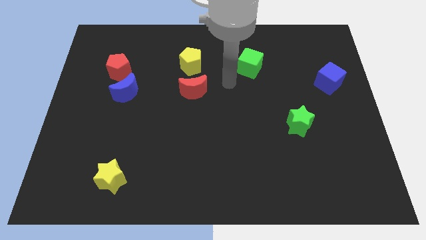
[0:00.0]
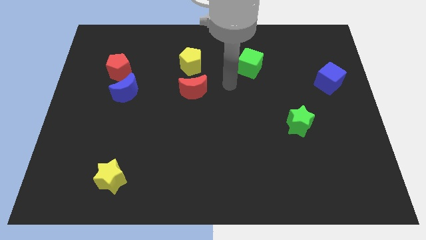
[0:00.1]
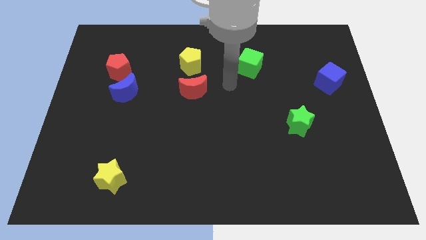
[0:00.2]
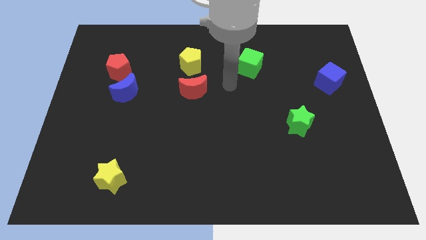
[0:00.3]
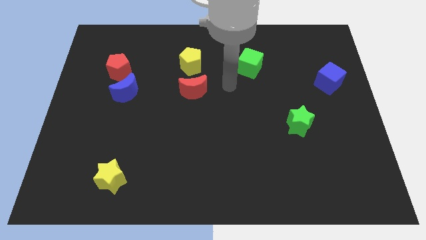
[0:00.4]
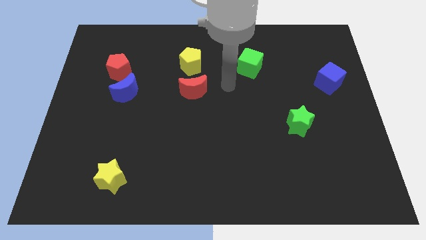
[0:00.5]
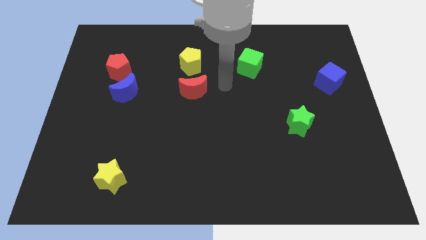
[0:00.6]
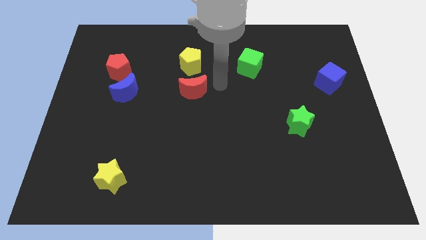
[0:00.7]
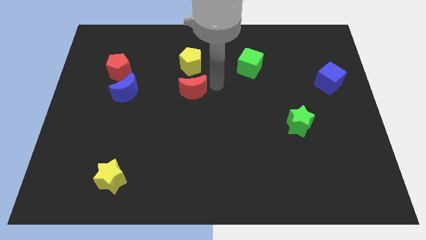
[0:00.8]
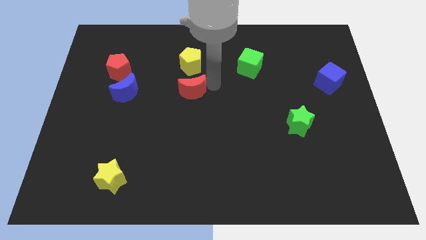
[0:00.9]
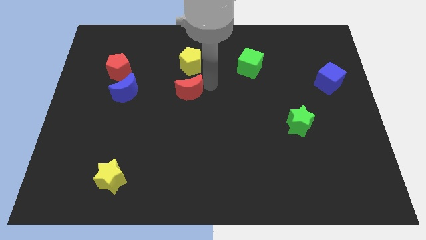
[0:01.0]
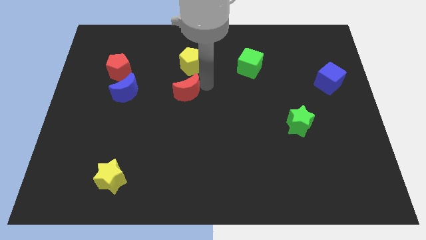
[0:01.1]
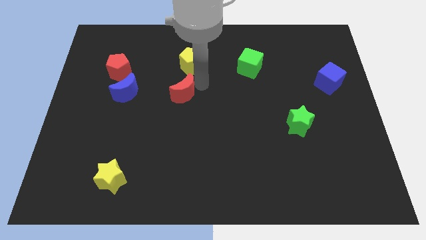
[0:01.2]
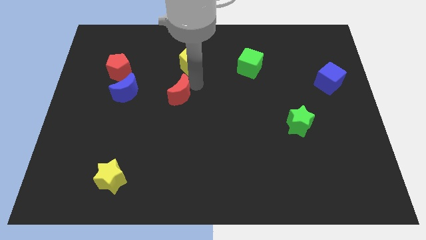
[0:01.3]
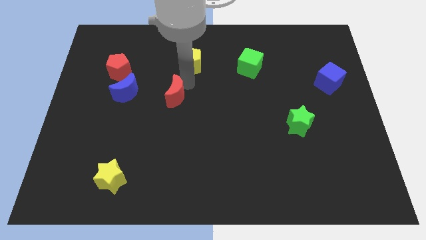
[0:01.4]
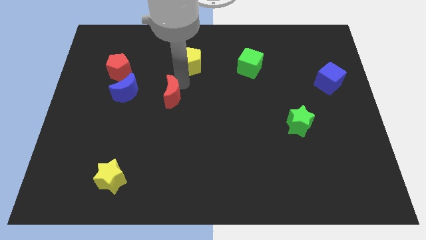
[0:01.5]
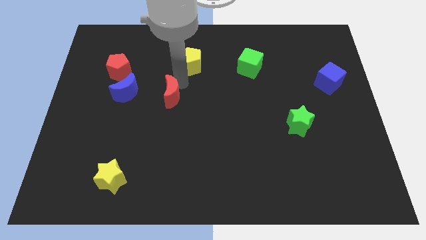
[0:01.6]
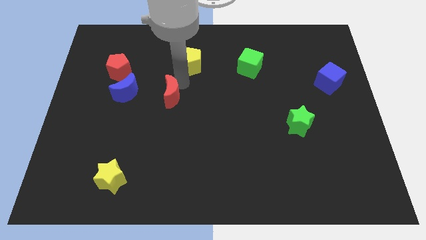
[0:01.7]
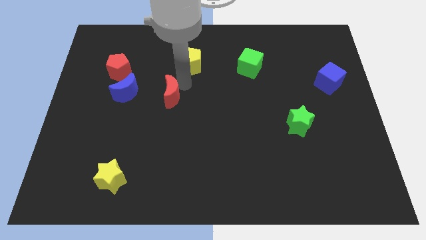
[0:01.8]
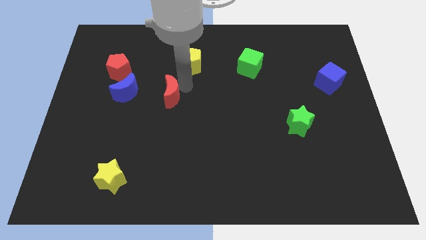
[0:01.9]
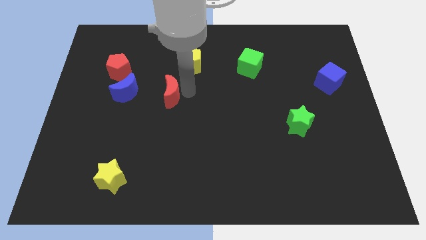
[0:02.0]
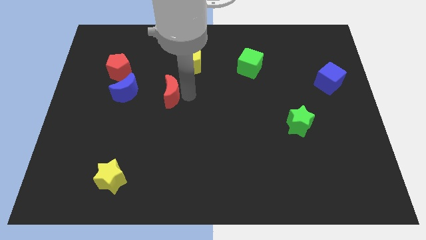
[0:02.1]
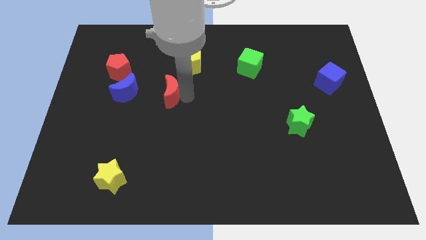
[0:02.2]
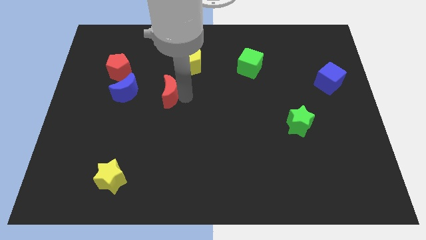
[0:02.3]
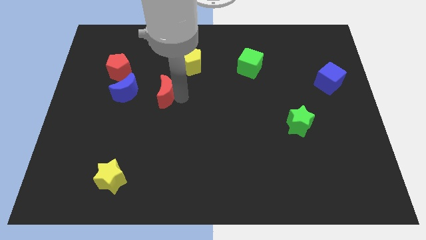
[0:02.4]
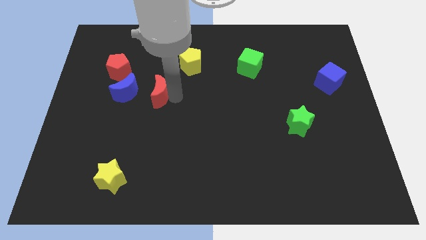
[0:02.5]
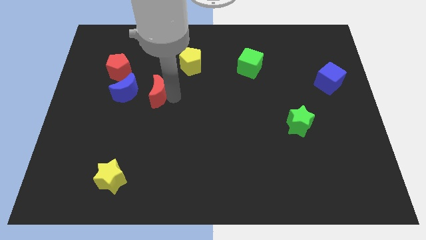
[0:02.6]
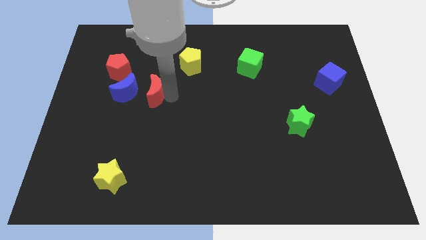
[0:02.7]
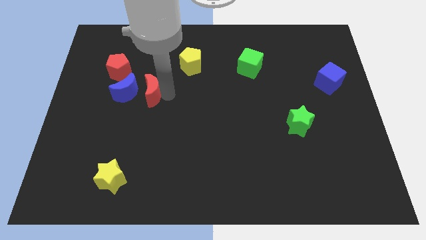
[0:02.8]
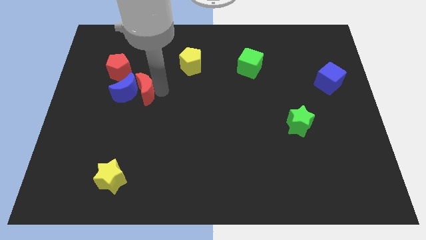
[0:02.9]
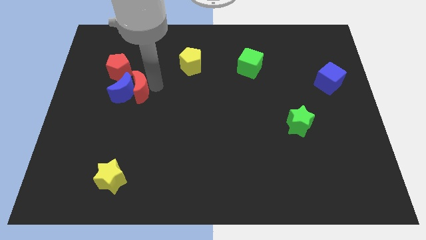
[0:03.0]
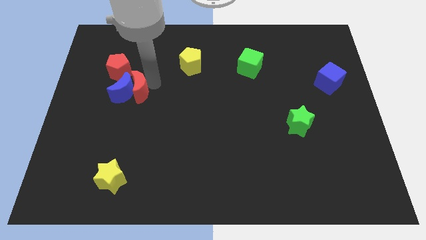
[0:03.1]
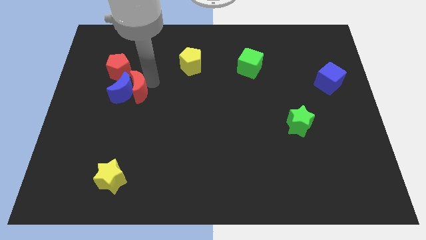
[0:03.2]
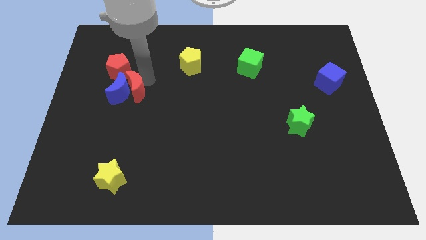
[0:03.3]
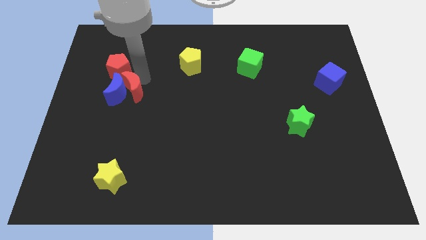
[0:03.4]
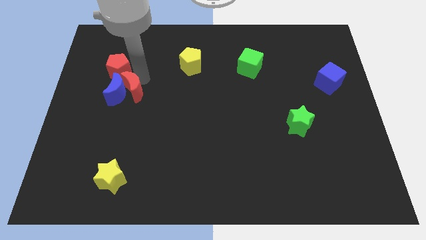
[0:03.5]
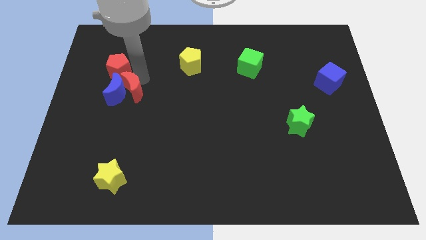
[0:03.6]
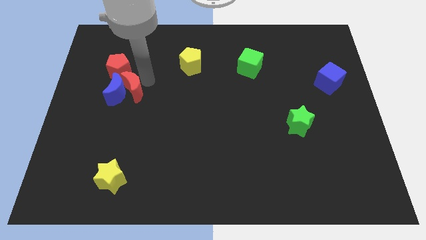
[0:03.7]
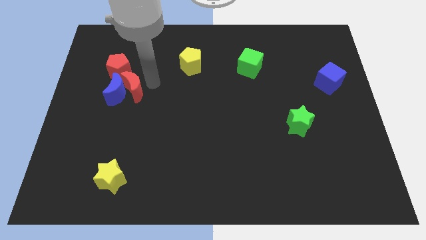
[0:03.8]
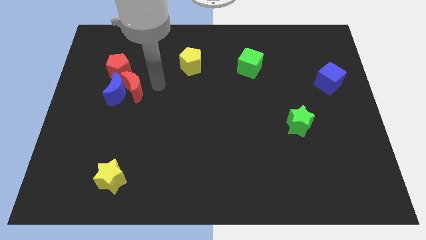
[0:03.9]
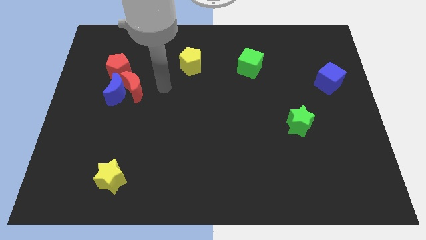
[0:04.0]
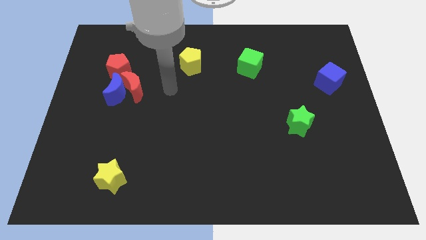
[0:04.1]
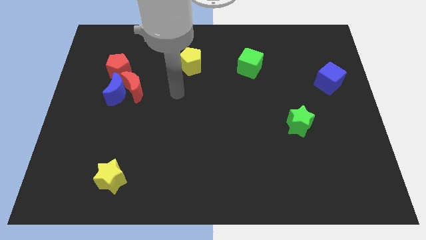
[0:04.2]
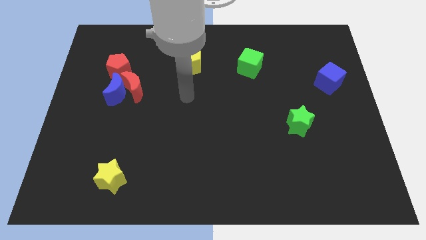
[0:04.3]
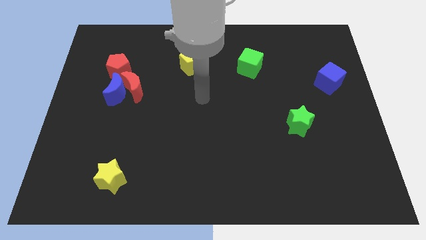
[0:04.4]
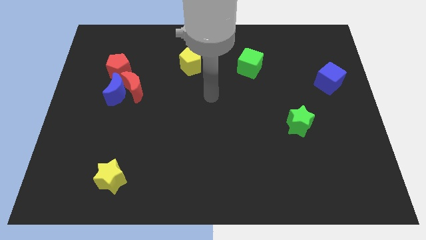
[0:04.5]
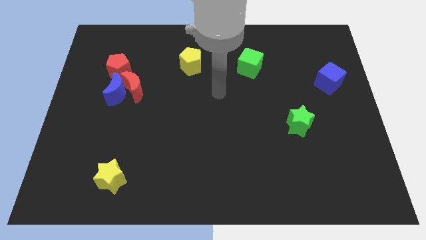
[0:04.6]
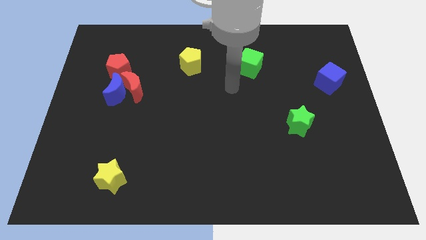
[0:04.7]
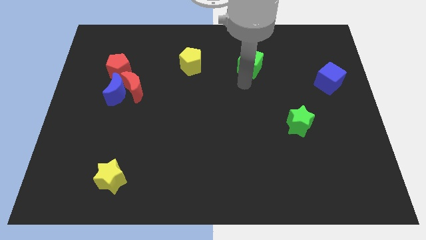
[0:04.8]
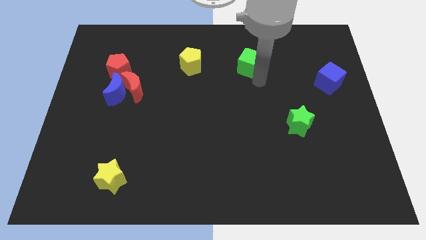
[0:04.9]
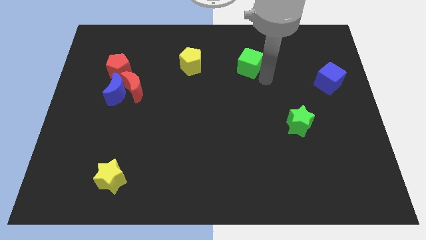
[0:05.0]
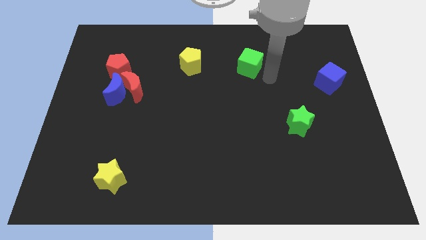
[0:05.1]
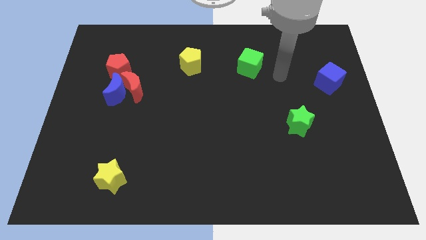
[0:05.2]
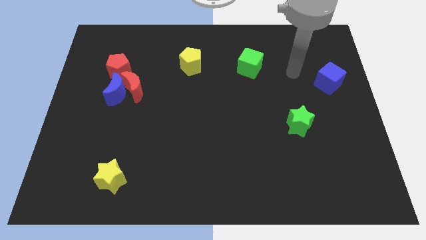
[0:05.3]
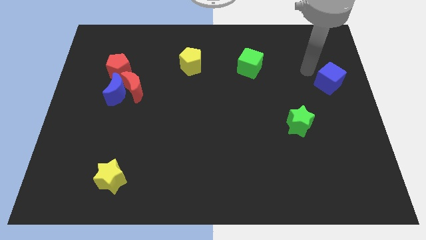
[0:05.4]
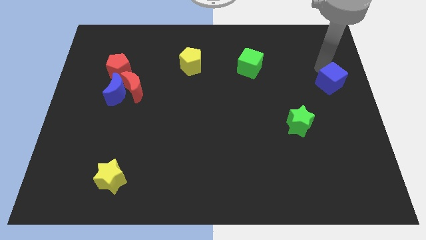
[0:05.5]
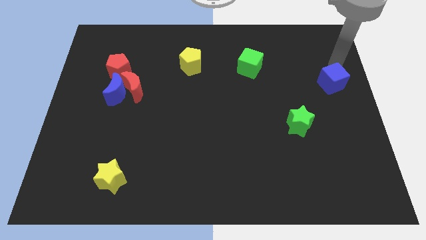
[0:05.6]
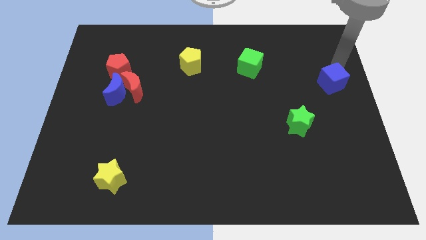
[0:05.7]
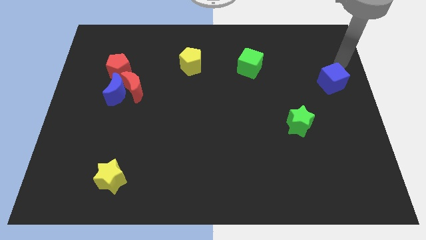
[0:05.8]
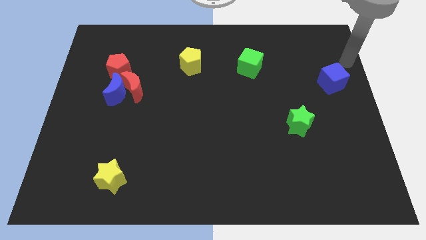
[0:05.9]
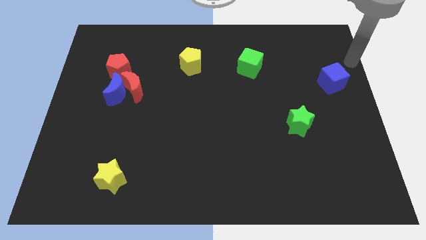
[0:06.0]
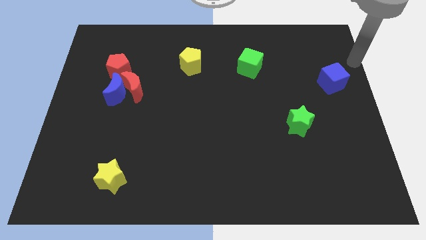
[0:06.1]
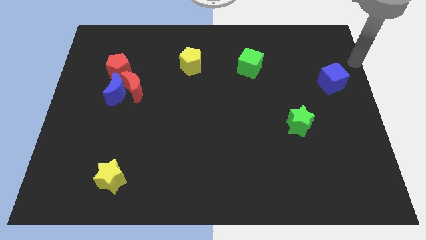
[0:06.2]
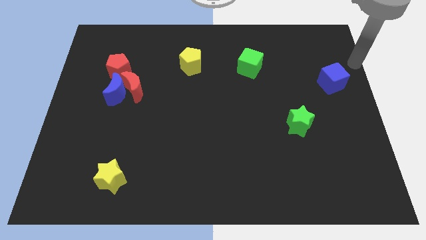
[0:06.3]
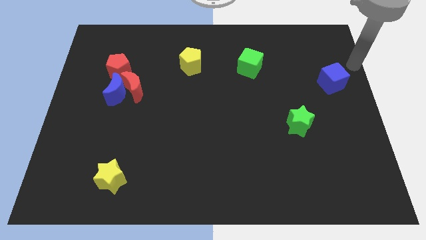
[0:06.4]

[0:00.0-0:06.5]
push the red moon into the blue moon

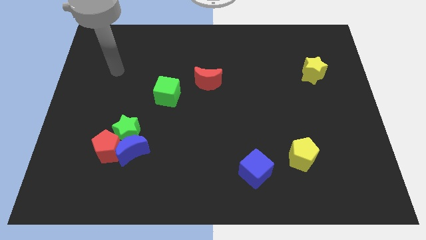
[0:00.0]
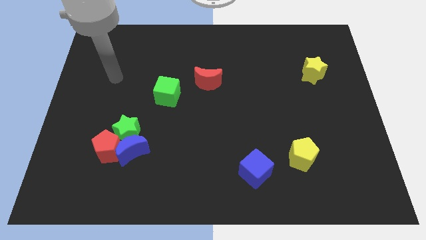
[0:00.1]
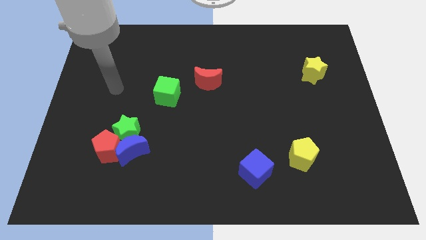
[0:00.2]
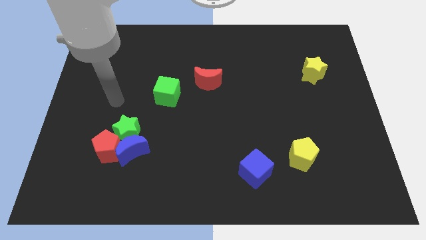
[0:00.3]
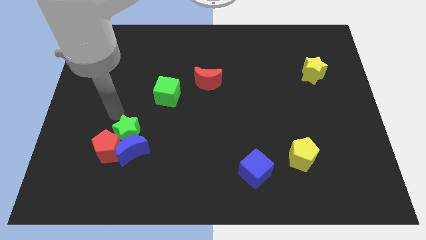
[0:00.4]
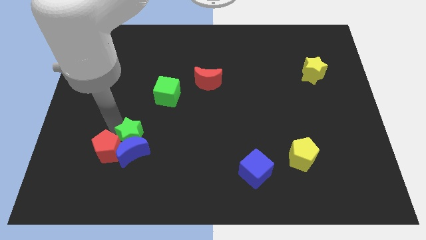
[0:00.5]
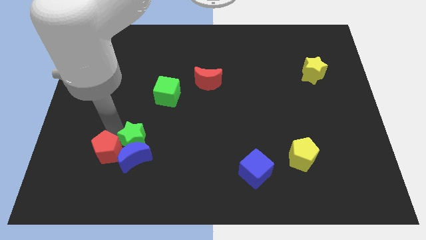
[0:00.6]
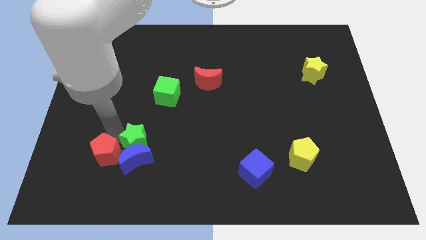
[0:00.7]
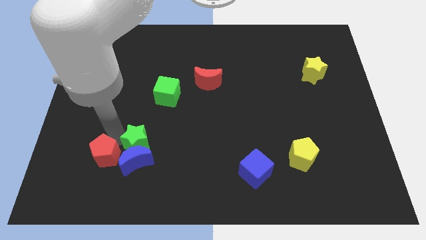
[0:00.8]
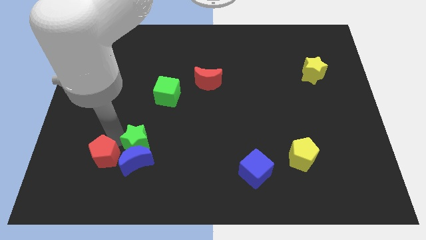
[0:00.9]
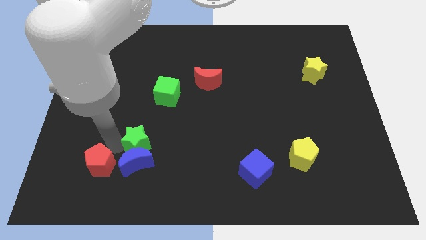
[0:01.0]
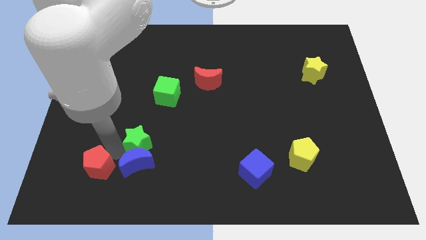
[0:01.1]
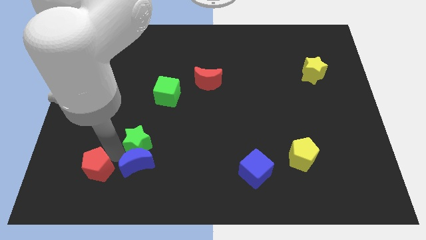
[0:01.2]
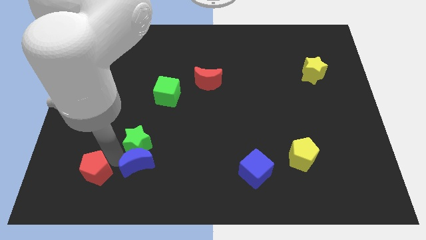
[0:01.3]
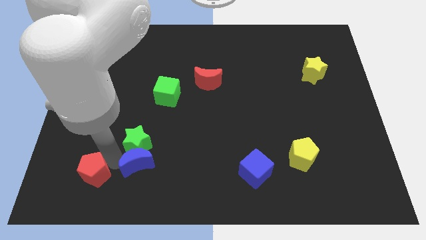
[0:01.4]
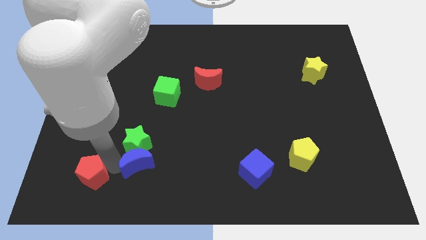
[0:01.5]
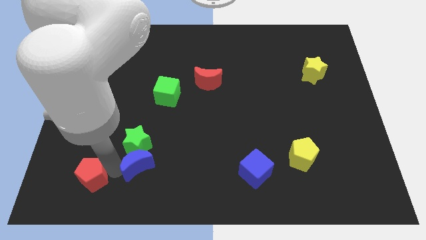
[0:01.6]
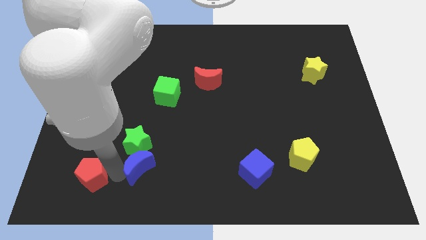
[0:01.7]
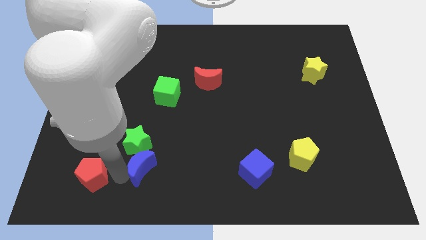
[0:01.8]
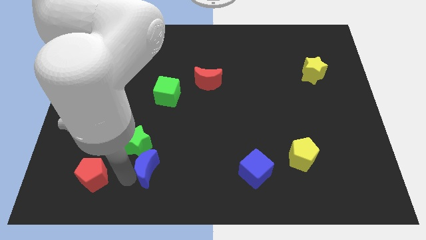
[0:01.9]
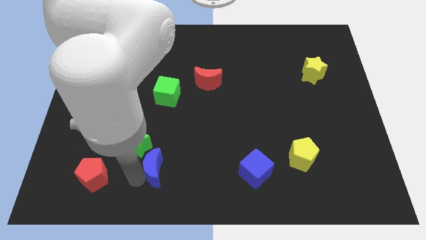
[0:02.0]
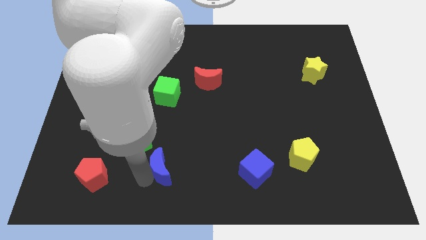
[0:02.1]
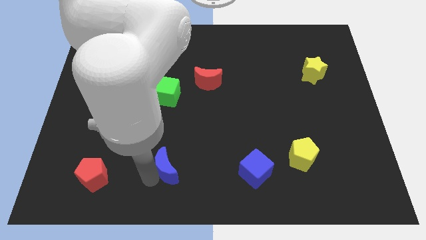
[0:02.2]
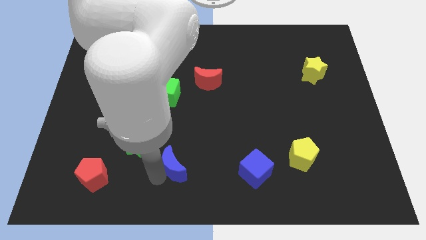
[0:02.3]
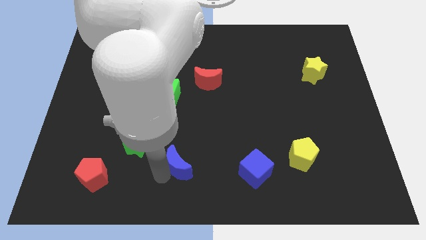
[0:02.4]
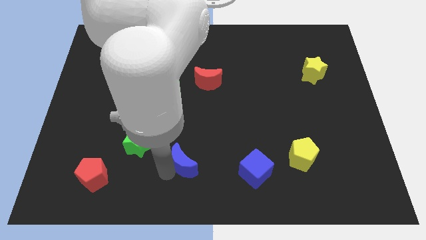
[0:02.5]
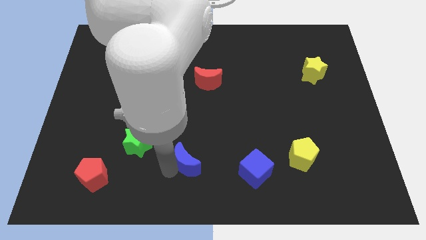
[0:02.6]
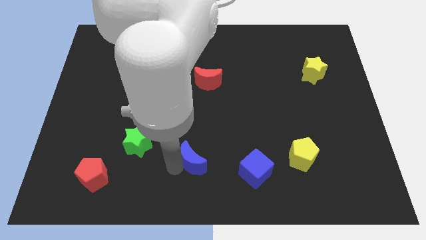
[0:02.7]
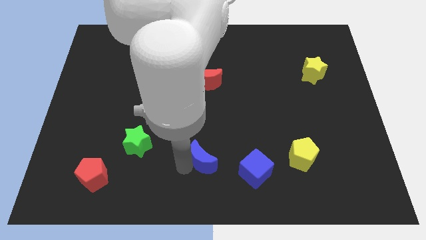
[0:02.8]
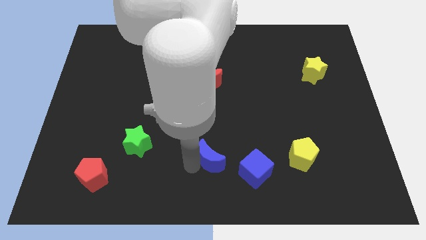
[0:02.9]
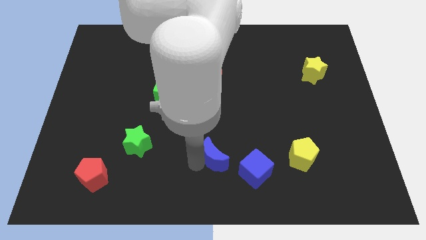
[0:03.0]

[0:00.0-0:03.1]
separate group of blocks formed by red pentagon green star and blue moon
